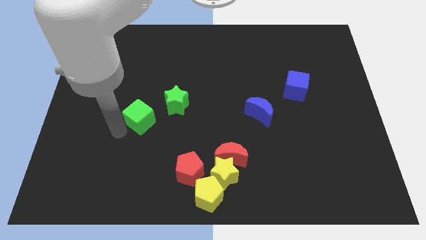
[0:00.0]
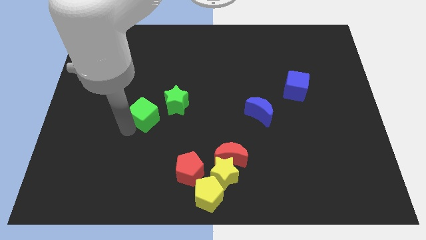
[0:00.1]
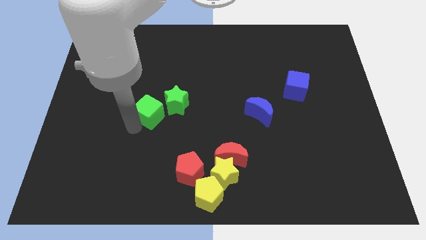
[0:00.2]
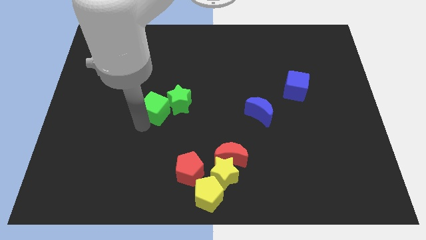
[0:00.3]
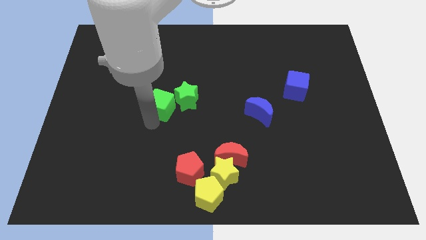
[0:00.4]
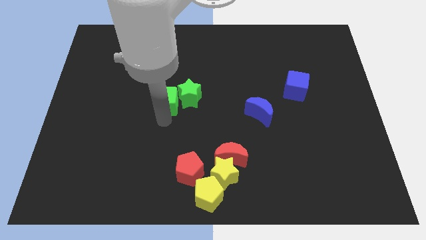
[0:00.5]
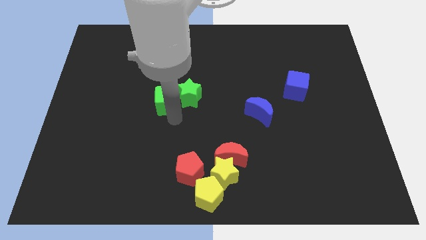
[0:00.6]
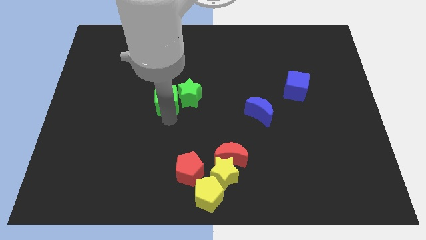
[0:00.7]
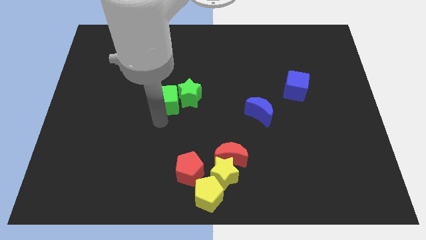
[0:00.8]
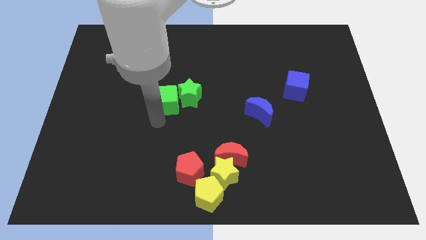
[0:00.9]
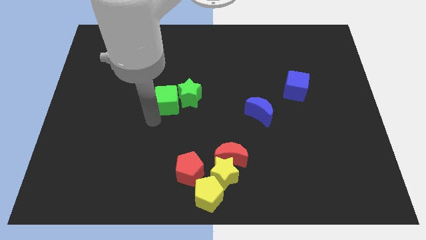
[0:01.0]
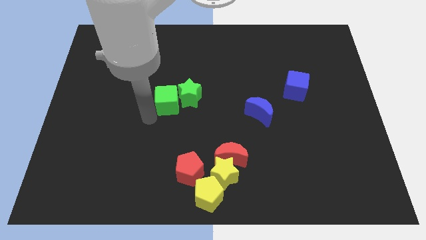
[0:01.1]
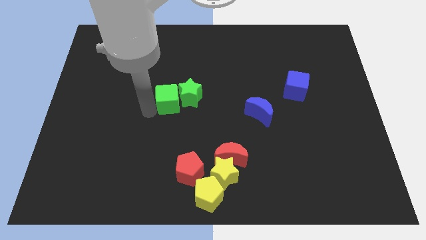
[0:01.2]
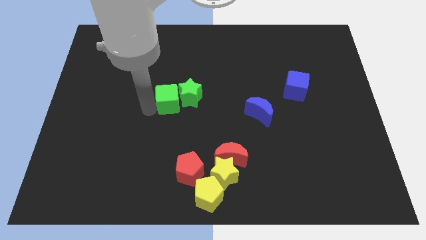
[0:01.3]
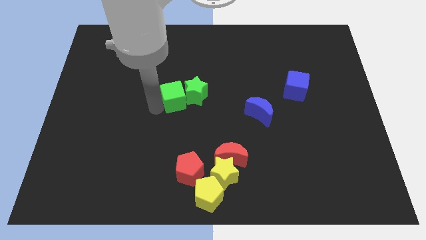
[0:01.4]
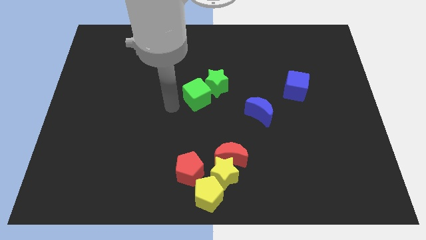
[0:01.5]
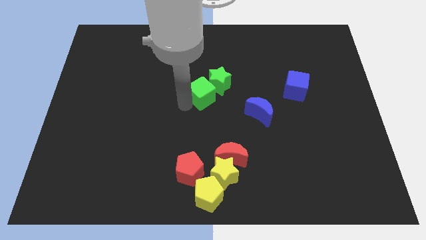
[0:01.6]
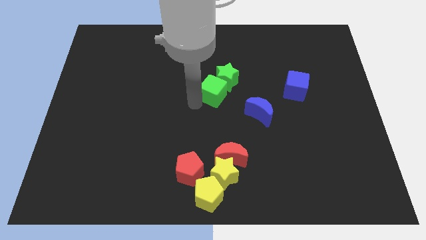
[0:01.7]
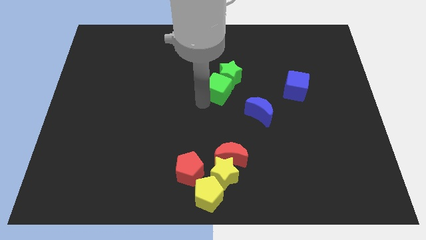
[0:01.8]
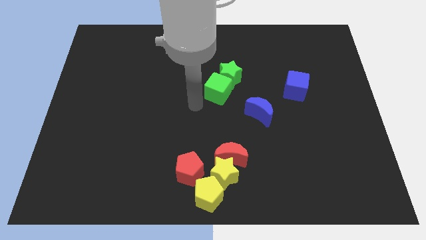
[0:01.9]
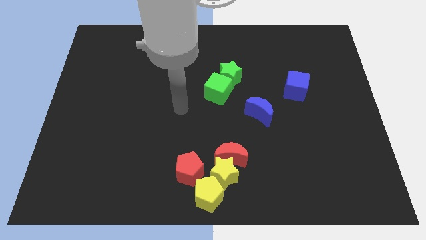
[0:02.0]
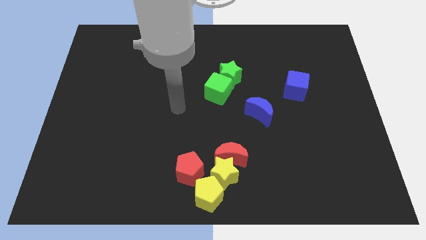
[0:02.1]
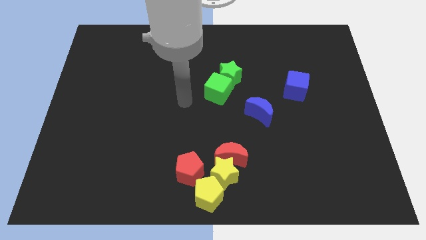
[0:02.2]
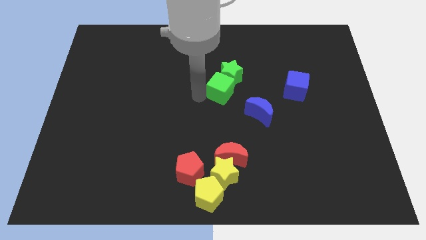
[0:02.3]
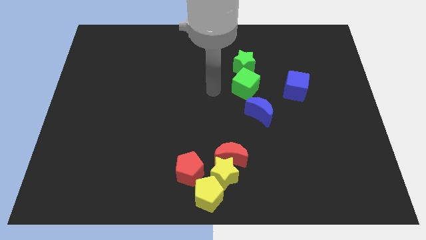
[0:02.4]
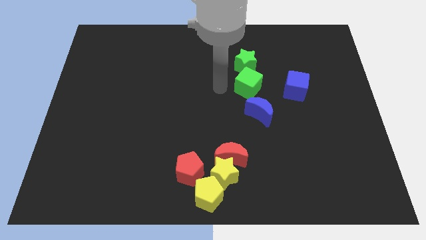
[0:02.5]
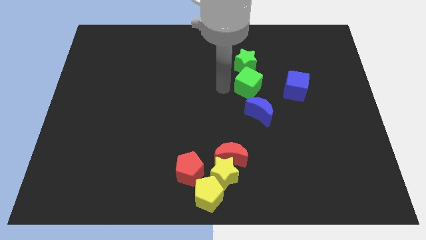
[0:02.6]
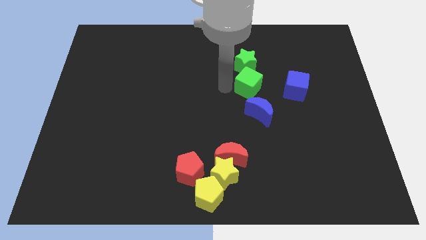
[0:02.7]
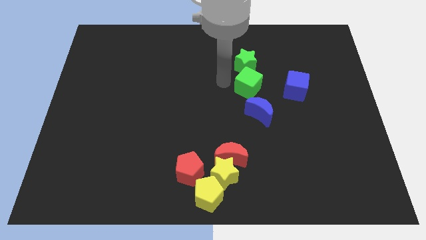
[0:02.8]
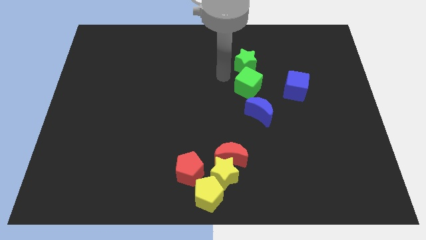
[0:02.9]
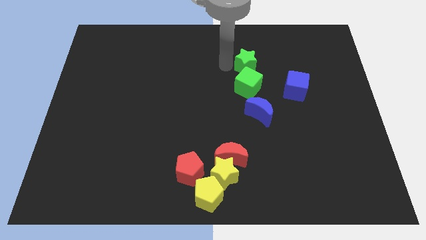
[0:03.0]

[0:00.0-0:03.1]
place the green blocks on the top of blue moon

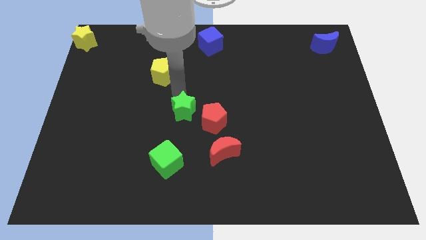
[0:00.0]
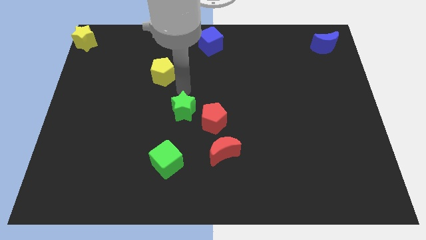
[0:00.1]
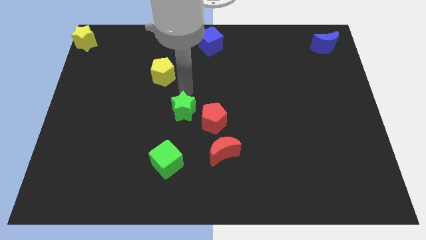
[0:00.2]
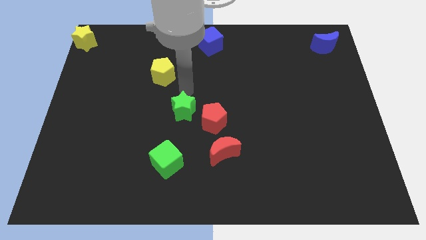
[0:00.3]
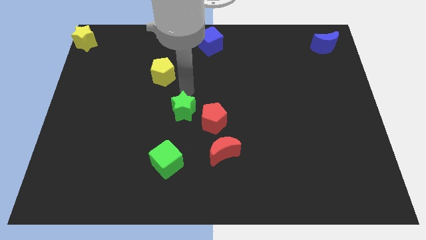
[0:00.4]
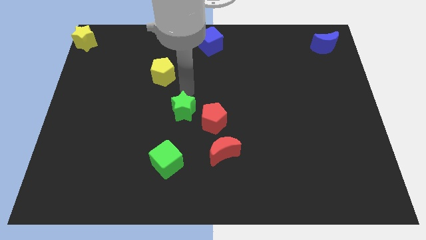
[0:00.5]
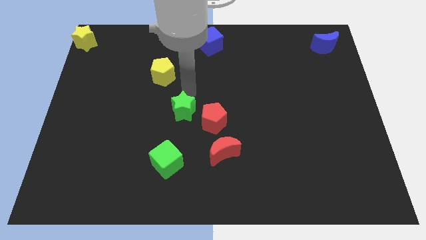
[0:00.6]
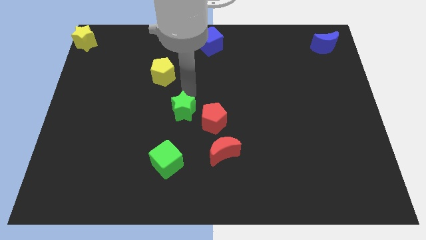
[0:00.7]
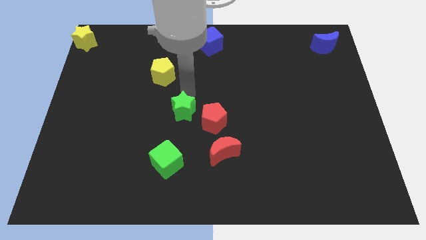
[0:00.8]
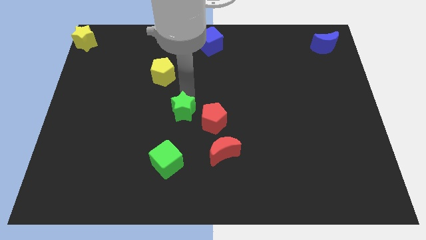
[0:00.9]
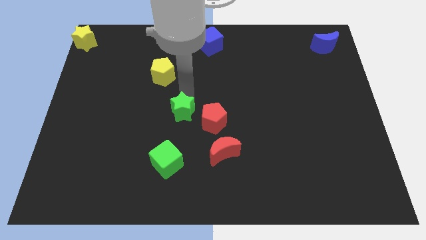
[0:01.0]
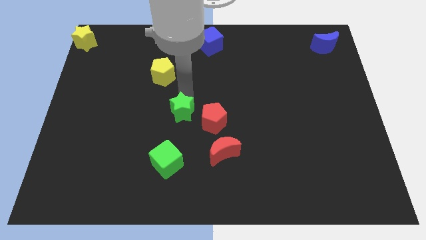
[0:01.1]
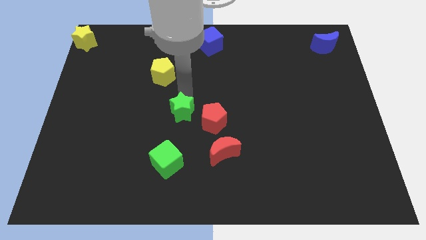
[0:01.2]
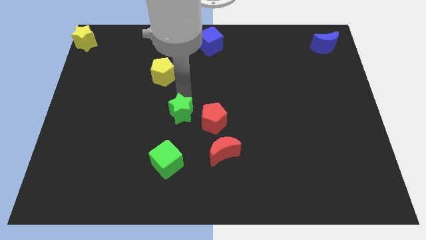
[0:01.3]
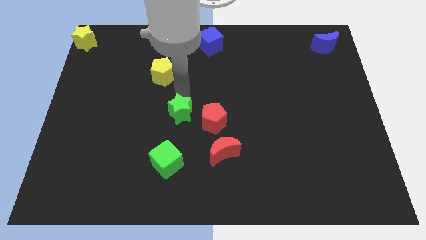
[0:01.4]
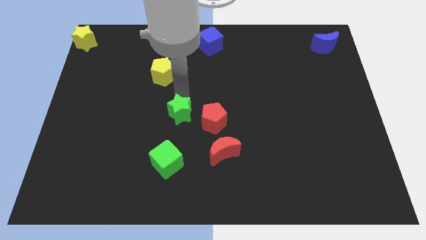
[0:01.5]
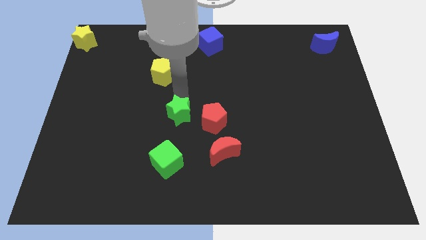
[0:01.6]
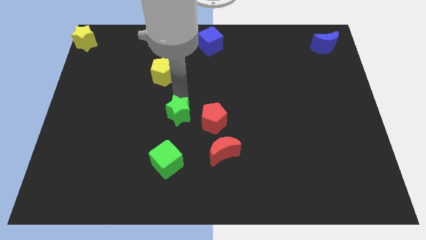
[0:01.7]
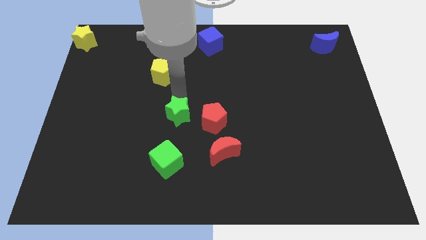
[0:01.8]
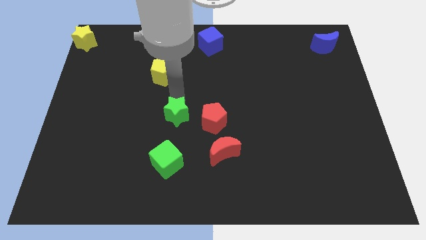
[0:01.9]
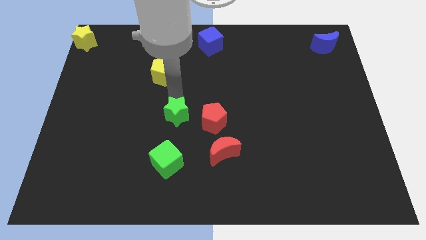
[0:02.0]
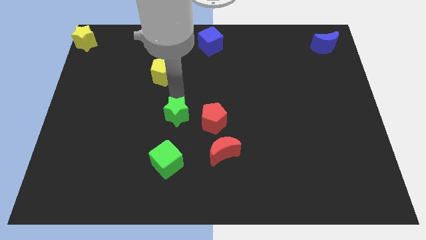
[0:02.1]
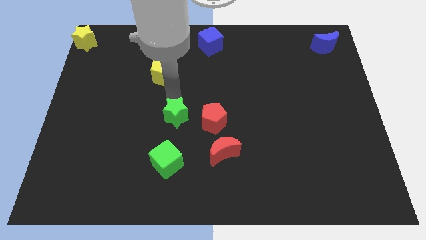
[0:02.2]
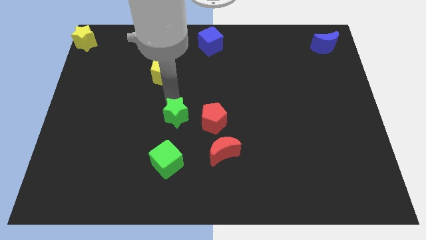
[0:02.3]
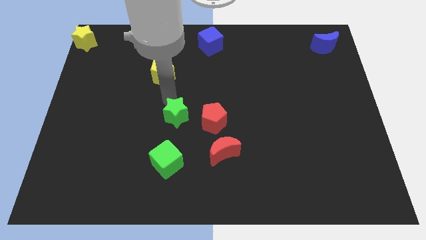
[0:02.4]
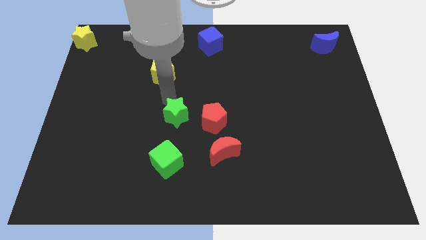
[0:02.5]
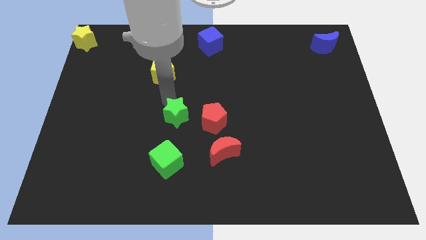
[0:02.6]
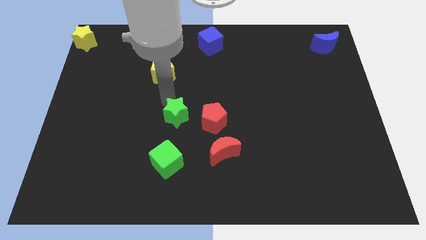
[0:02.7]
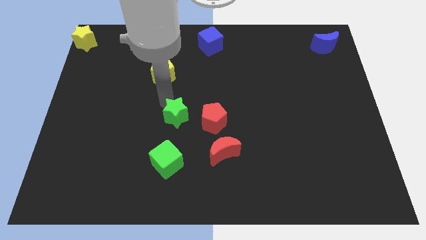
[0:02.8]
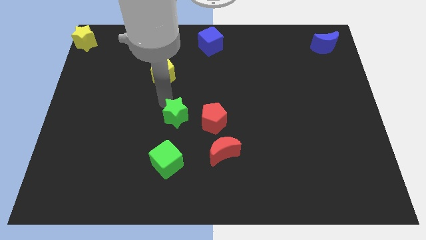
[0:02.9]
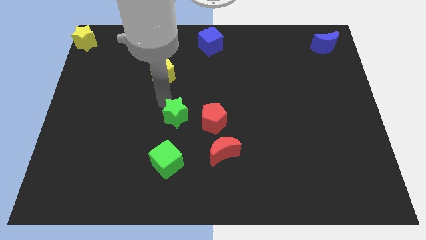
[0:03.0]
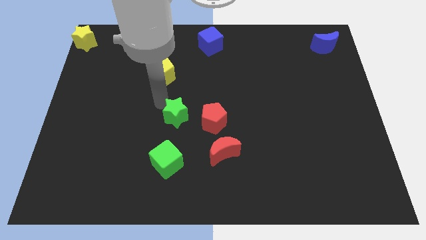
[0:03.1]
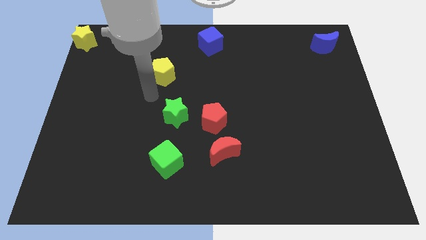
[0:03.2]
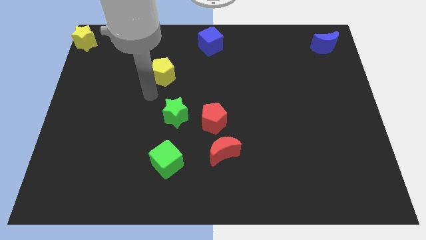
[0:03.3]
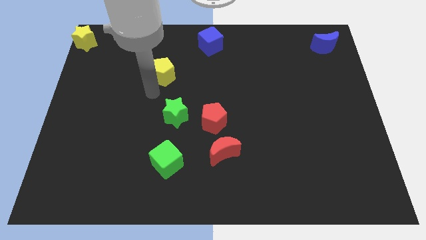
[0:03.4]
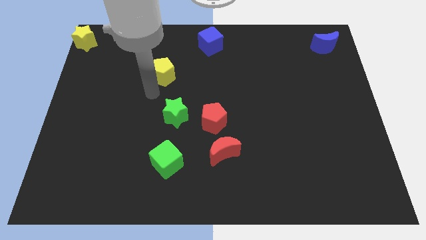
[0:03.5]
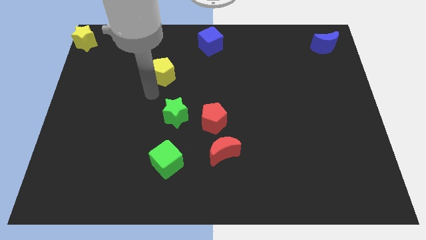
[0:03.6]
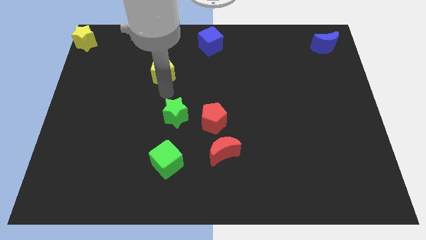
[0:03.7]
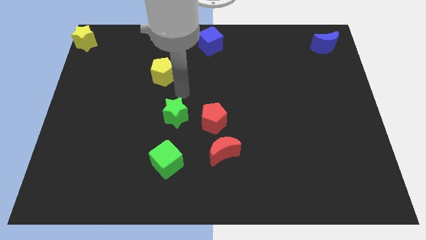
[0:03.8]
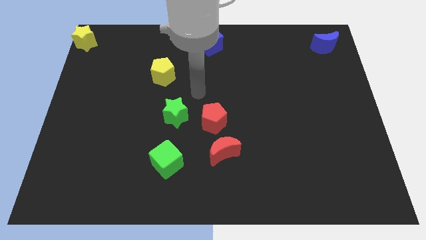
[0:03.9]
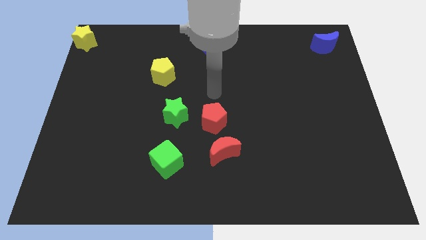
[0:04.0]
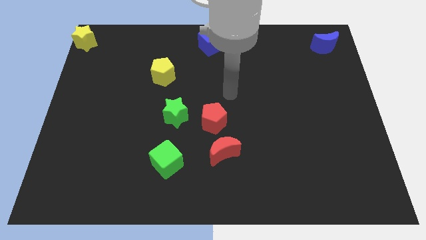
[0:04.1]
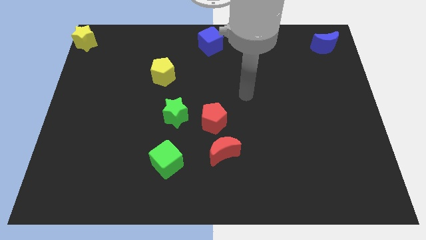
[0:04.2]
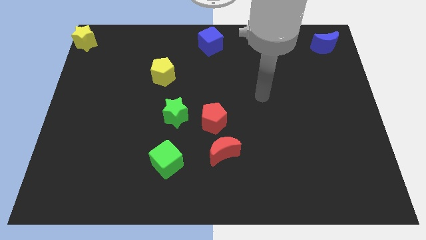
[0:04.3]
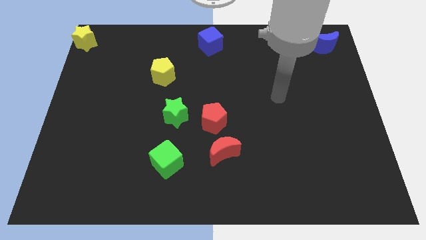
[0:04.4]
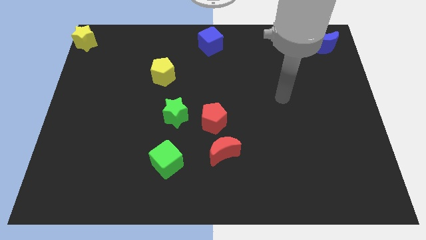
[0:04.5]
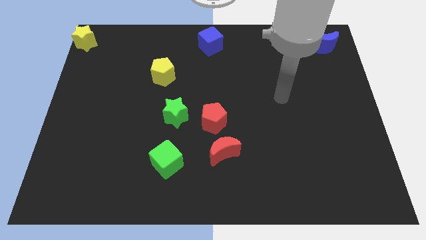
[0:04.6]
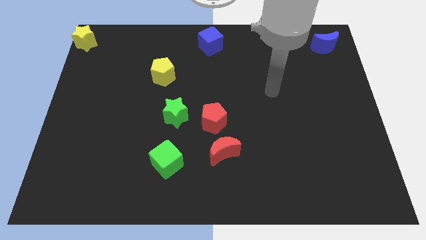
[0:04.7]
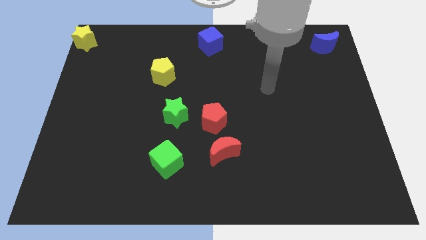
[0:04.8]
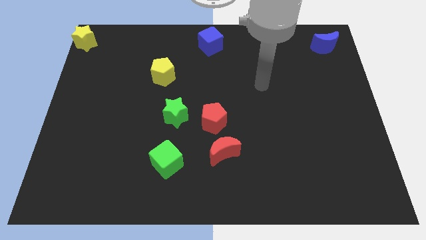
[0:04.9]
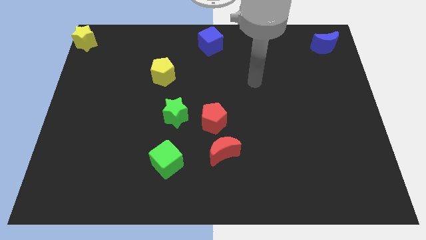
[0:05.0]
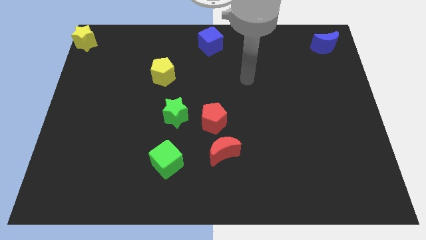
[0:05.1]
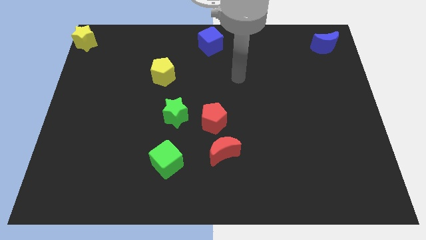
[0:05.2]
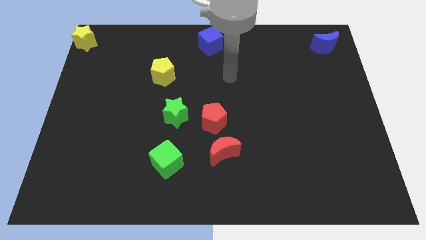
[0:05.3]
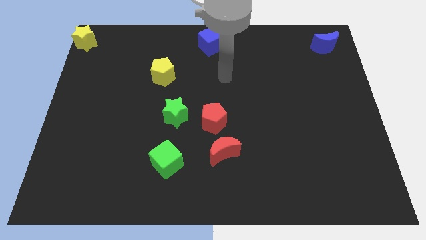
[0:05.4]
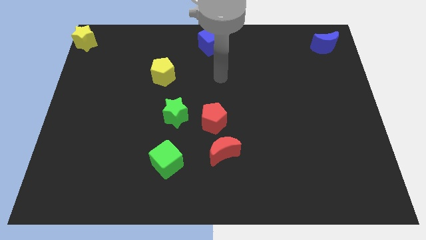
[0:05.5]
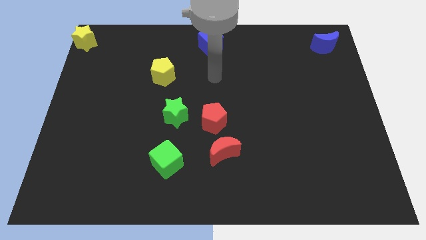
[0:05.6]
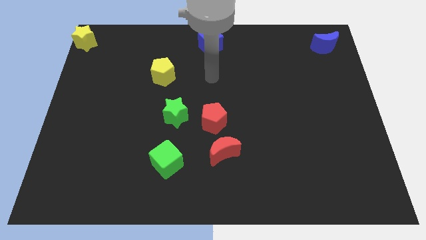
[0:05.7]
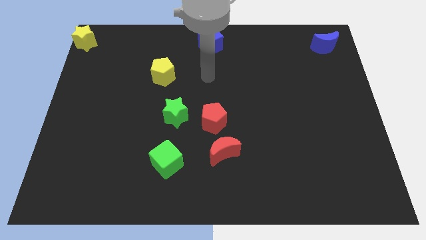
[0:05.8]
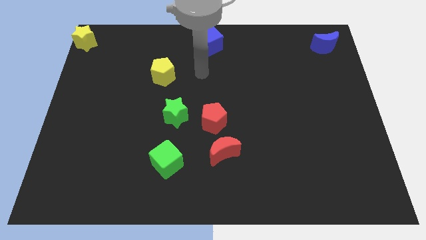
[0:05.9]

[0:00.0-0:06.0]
place the green star to the left of the red pentagon
